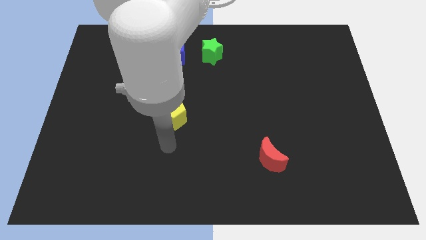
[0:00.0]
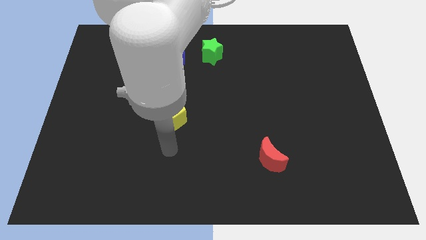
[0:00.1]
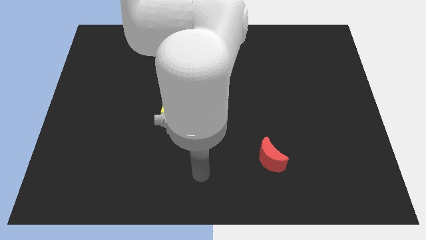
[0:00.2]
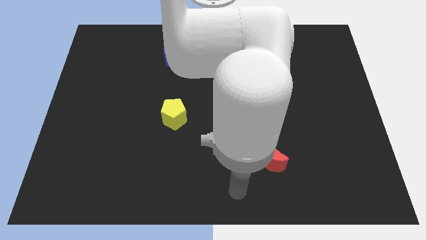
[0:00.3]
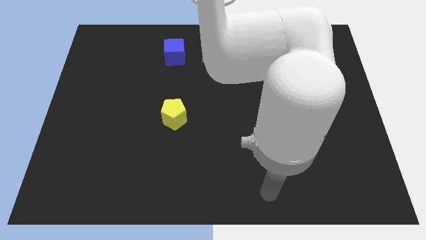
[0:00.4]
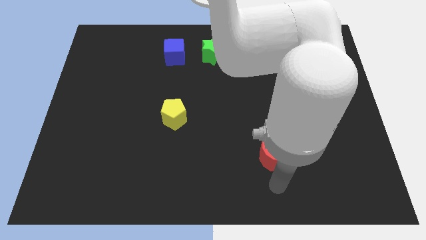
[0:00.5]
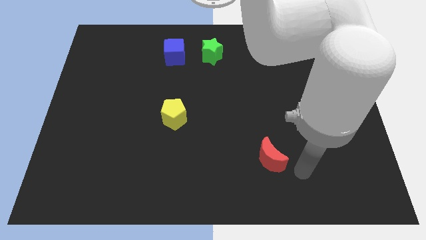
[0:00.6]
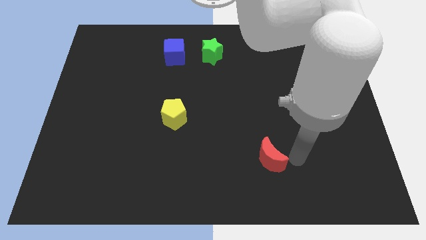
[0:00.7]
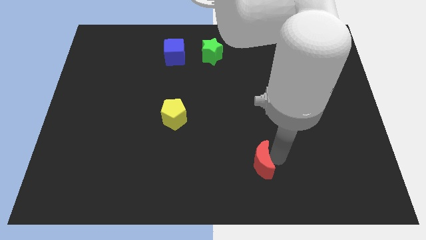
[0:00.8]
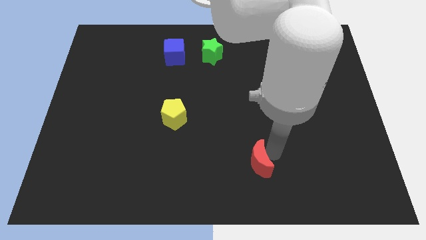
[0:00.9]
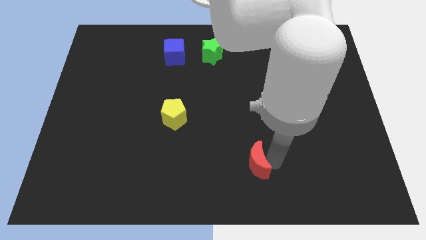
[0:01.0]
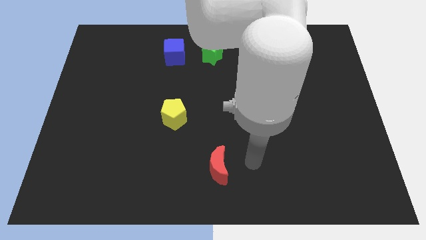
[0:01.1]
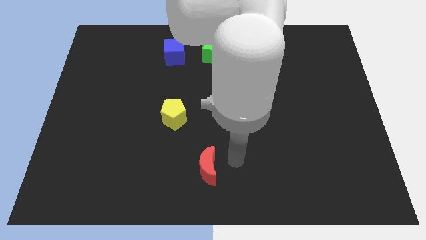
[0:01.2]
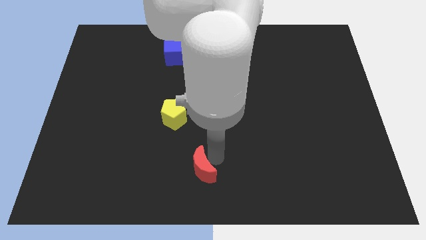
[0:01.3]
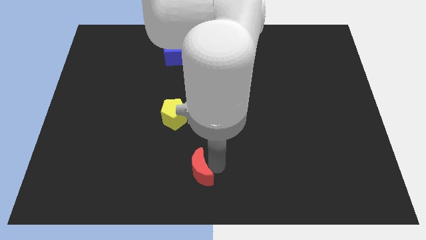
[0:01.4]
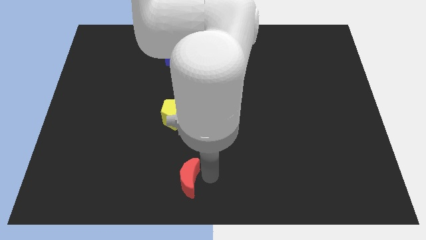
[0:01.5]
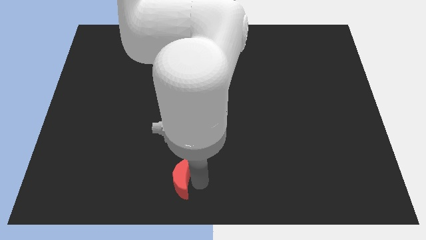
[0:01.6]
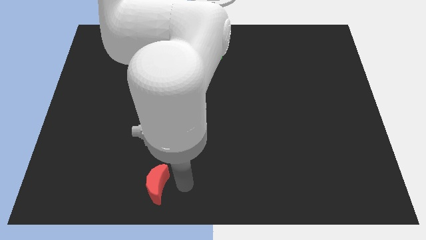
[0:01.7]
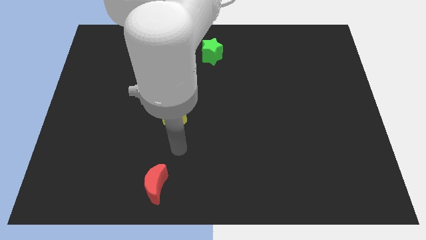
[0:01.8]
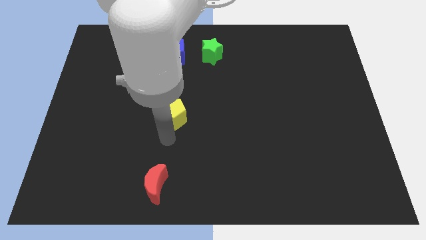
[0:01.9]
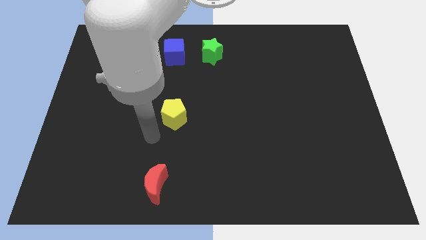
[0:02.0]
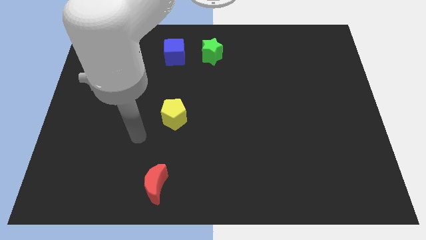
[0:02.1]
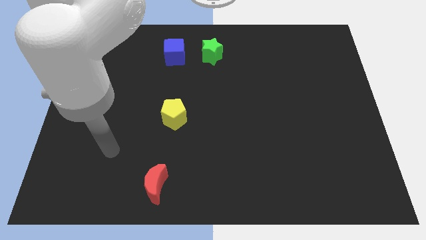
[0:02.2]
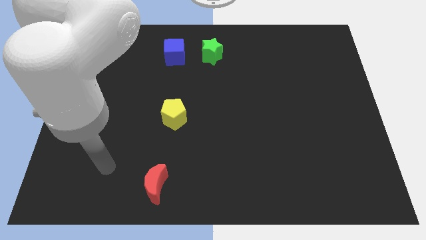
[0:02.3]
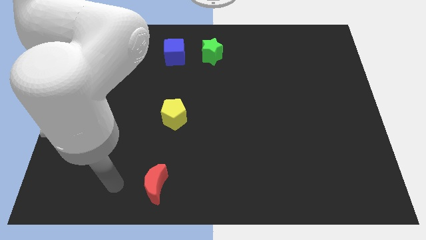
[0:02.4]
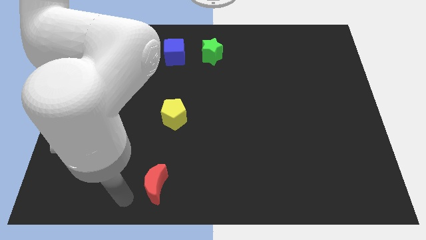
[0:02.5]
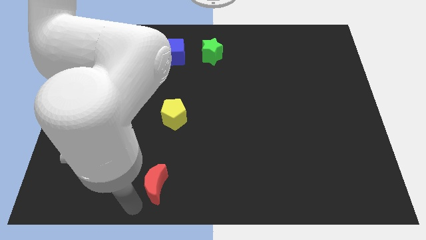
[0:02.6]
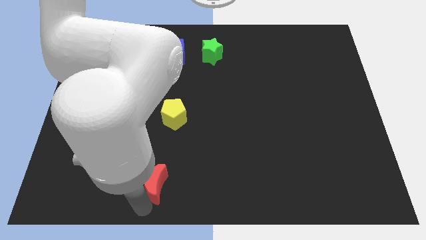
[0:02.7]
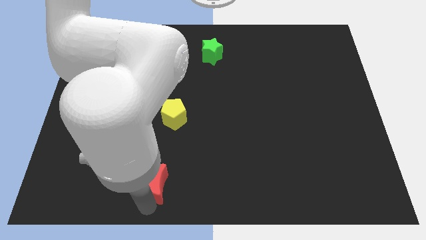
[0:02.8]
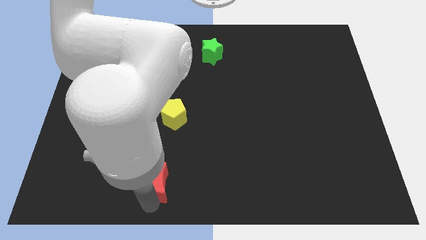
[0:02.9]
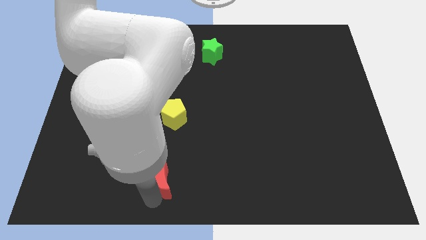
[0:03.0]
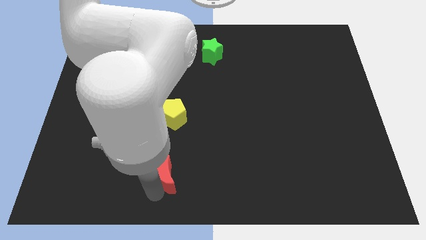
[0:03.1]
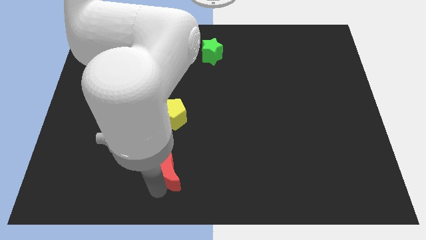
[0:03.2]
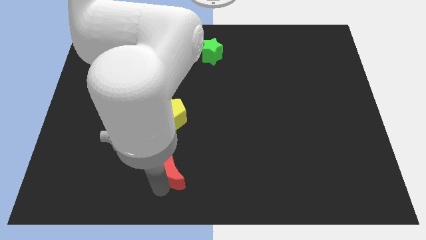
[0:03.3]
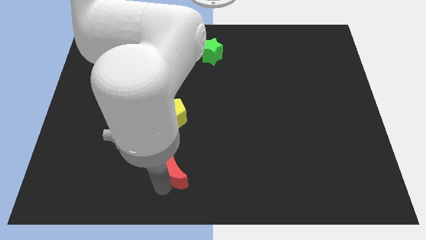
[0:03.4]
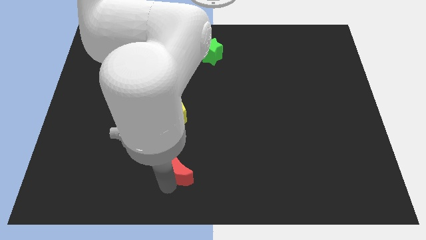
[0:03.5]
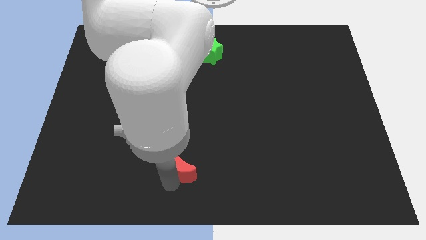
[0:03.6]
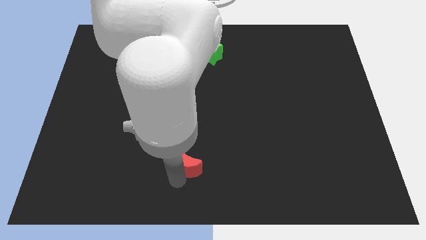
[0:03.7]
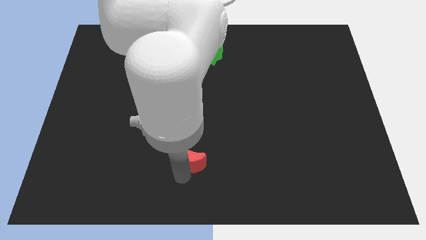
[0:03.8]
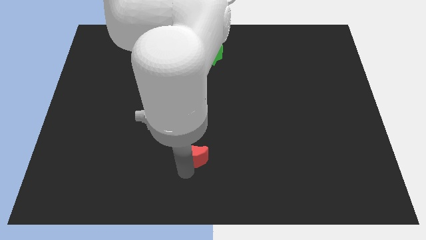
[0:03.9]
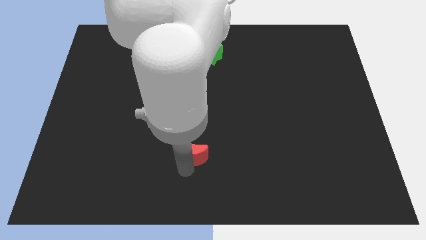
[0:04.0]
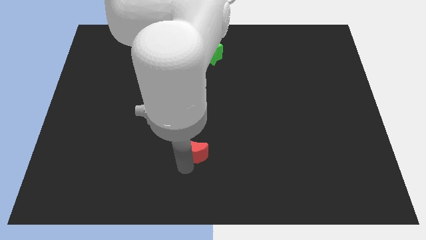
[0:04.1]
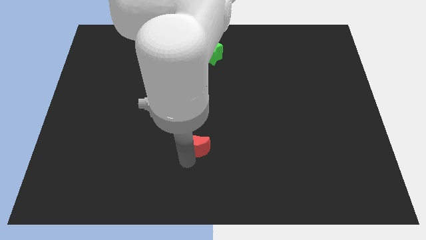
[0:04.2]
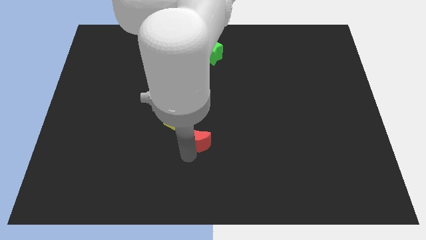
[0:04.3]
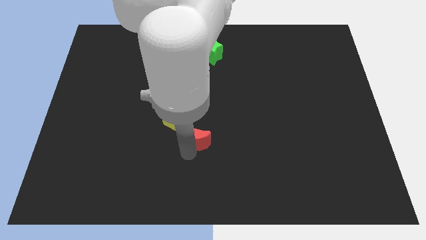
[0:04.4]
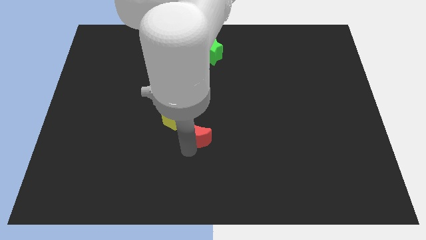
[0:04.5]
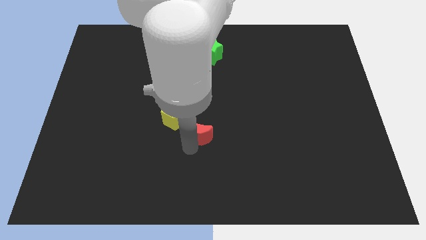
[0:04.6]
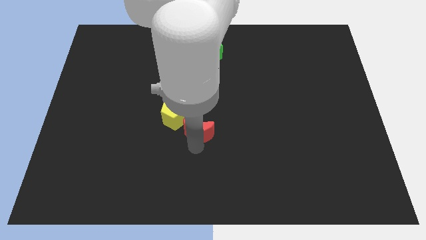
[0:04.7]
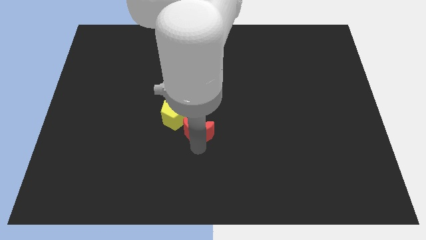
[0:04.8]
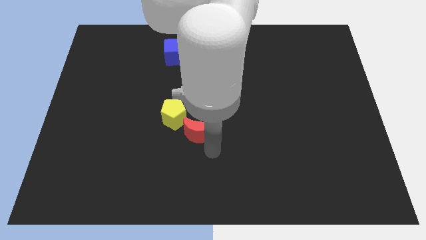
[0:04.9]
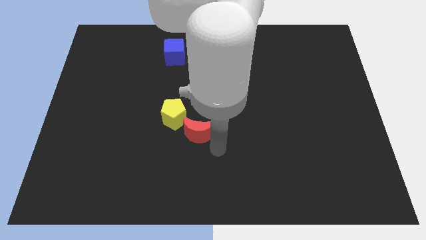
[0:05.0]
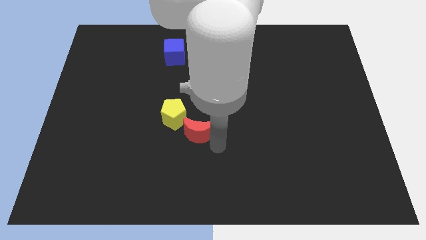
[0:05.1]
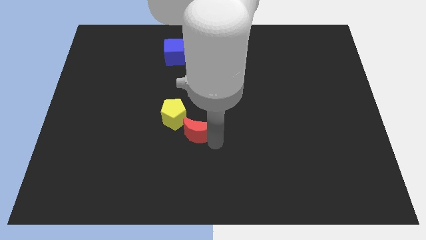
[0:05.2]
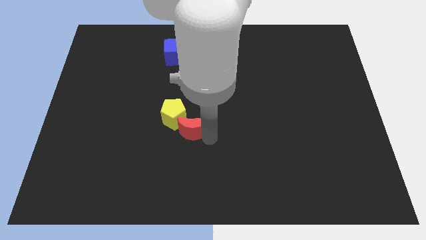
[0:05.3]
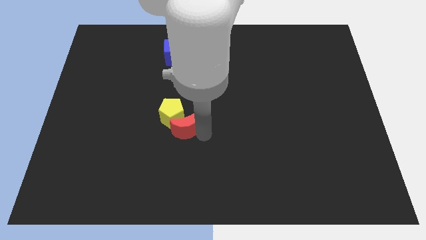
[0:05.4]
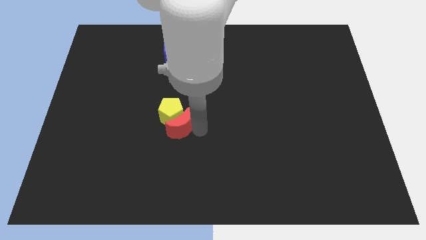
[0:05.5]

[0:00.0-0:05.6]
put the moon towards the pentagon

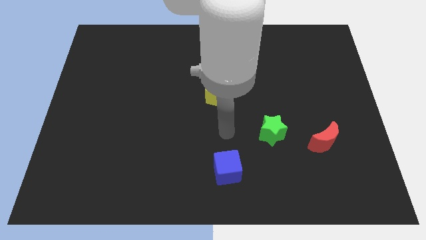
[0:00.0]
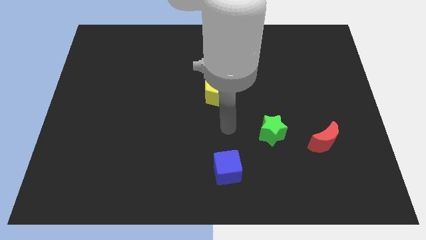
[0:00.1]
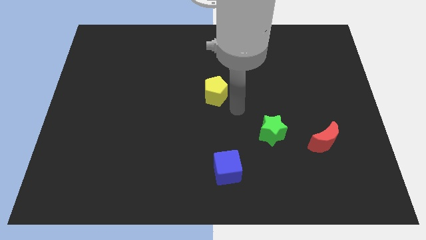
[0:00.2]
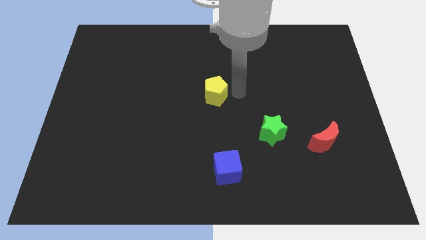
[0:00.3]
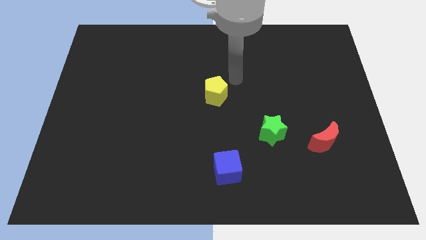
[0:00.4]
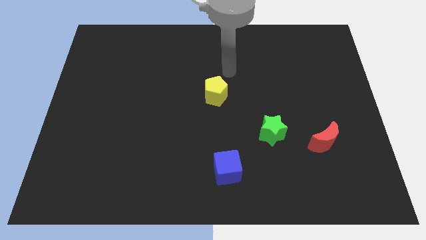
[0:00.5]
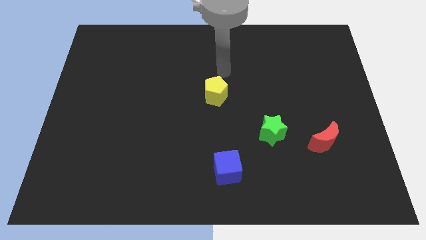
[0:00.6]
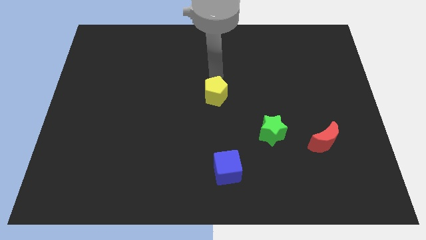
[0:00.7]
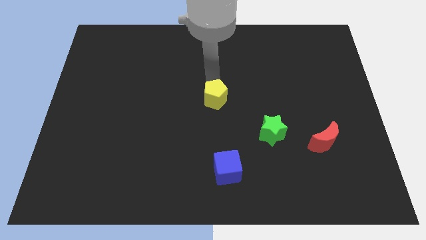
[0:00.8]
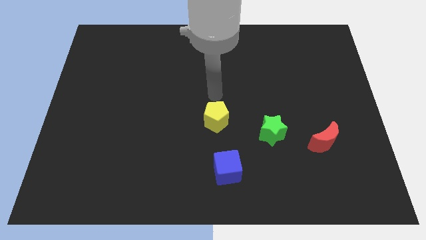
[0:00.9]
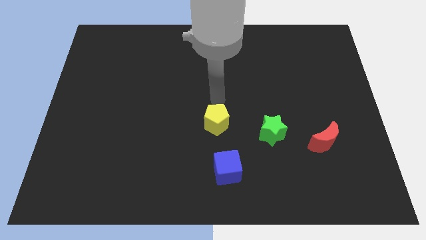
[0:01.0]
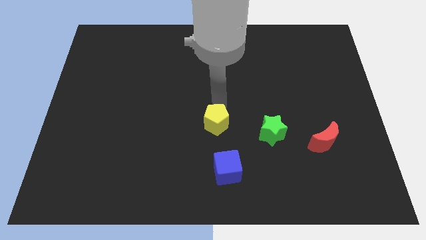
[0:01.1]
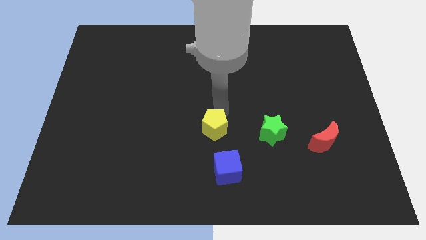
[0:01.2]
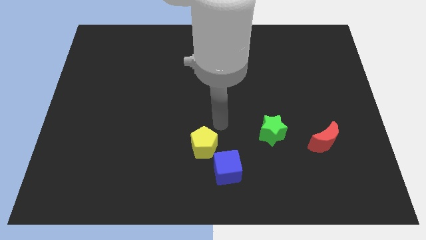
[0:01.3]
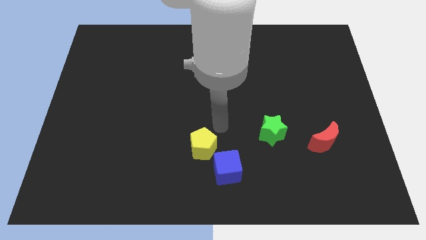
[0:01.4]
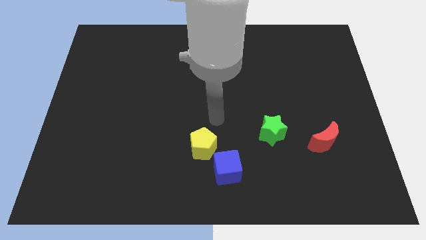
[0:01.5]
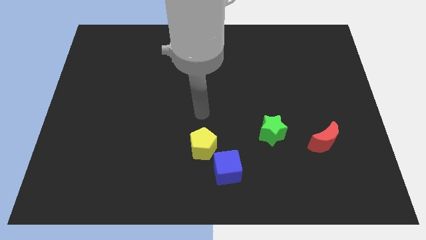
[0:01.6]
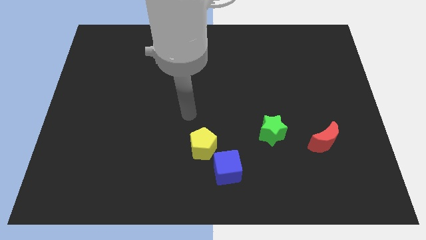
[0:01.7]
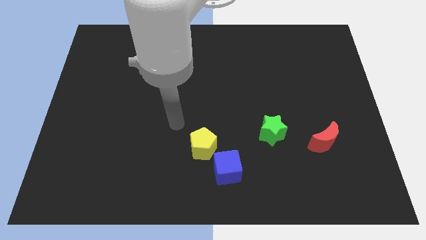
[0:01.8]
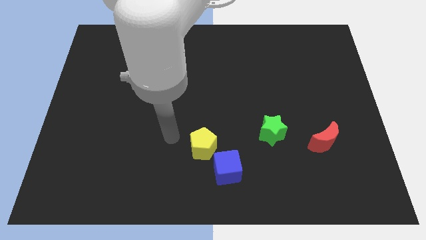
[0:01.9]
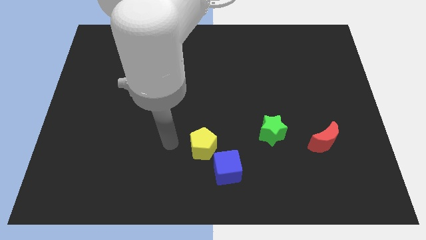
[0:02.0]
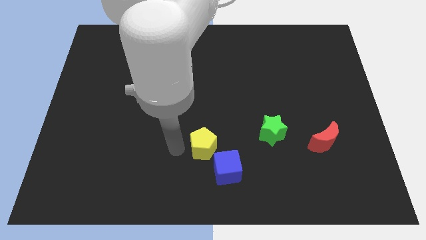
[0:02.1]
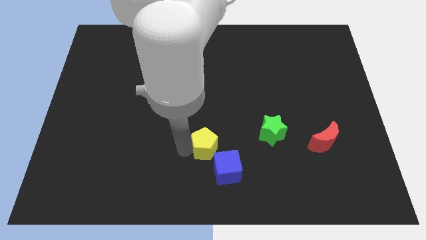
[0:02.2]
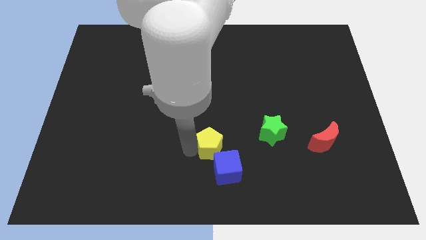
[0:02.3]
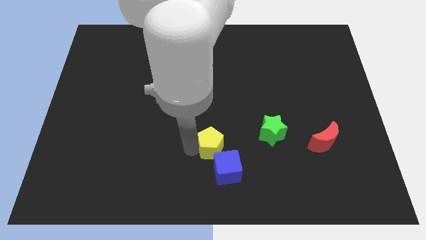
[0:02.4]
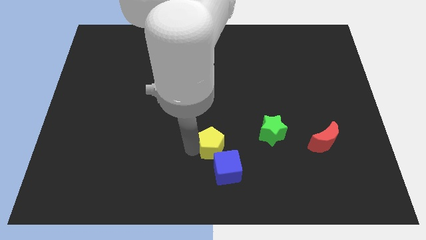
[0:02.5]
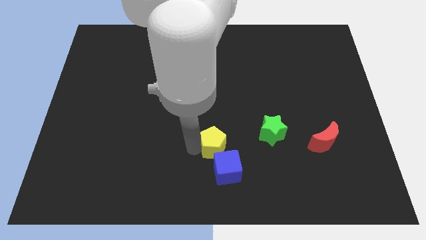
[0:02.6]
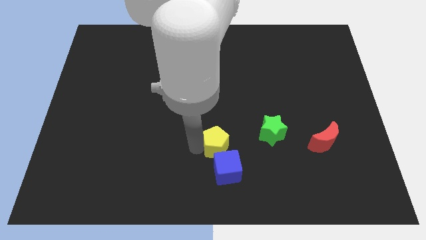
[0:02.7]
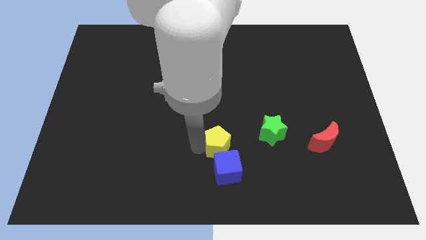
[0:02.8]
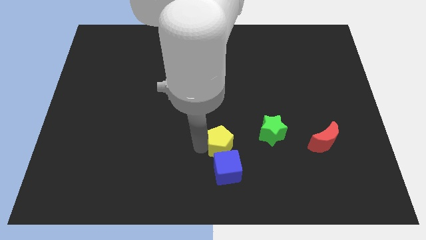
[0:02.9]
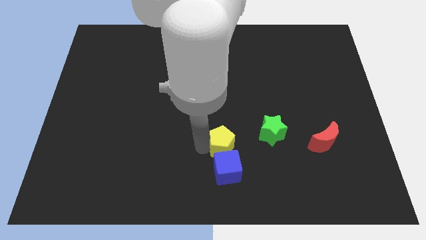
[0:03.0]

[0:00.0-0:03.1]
put the pentagon to the blue block
